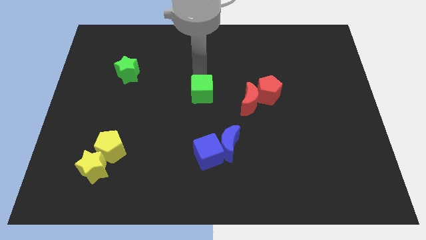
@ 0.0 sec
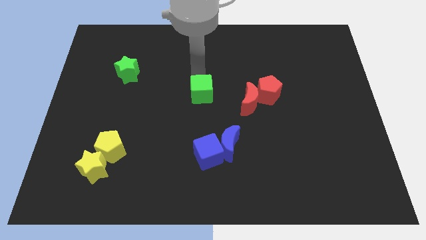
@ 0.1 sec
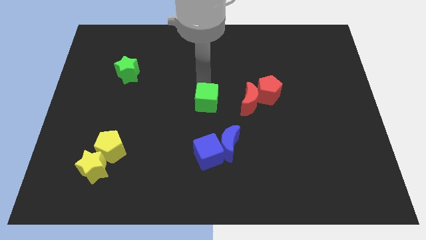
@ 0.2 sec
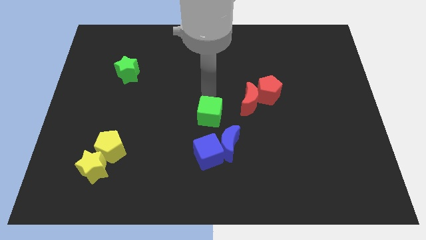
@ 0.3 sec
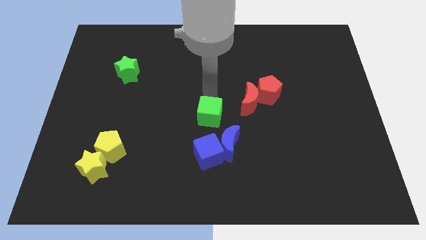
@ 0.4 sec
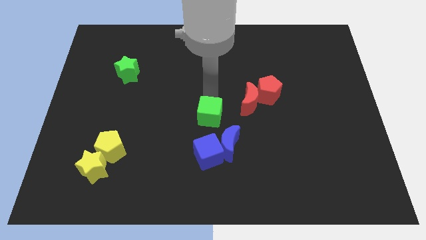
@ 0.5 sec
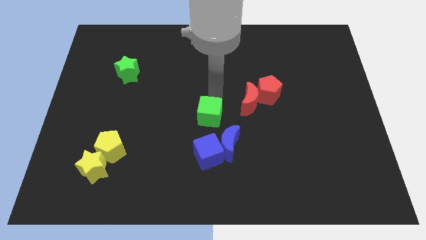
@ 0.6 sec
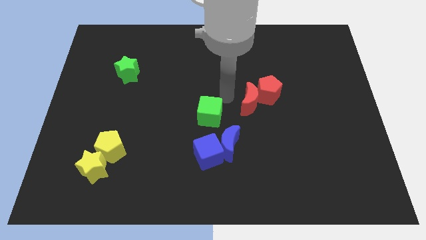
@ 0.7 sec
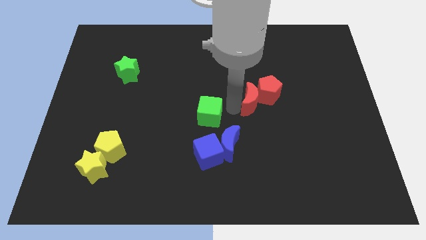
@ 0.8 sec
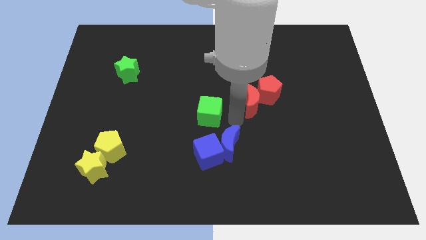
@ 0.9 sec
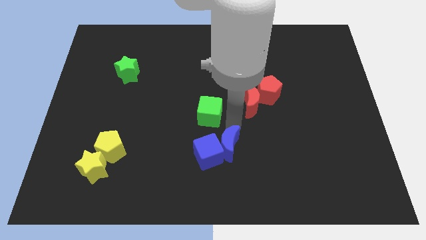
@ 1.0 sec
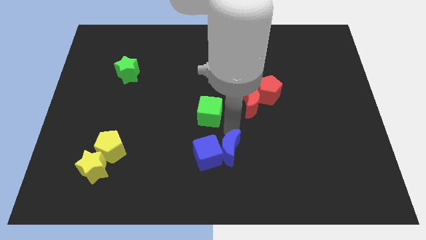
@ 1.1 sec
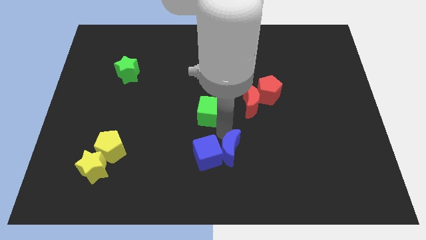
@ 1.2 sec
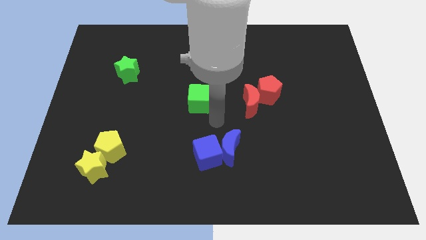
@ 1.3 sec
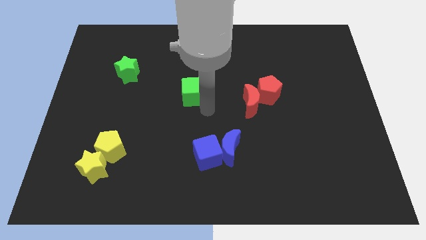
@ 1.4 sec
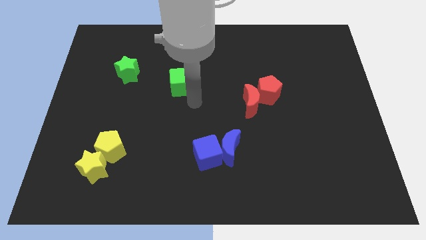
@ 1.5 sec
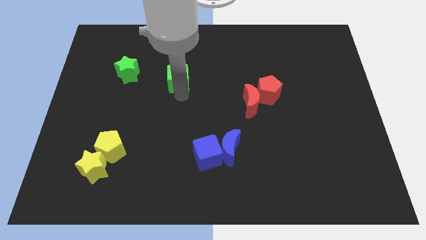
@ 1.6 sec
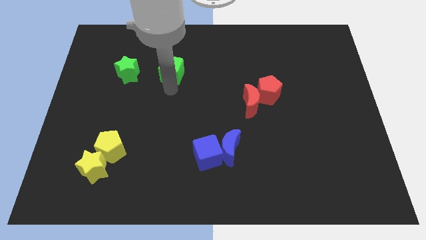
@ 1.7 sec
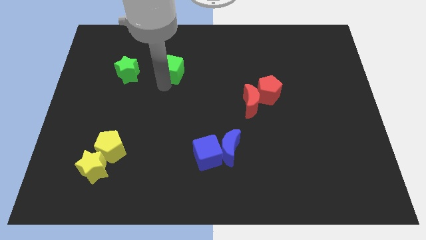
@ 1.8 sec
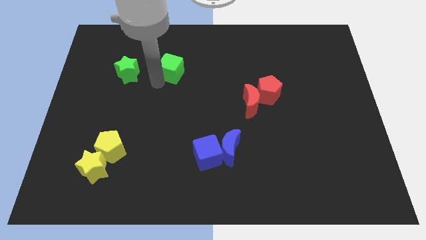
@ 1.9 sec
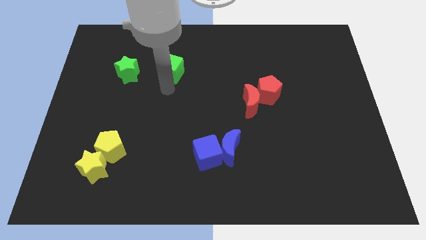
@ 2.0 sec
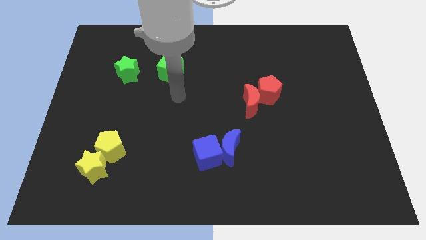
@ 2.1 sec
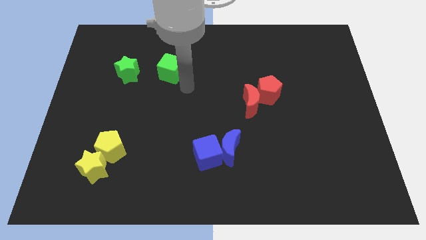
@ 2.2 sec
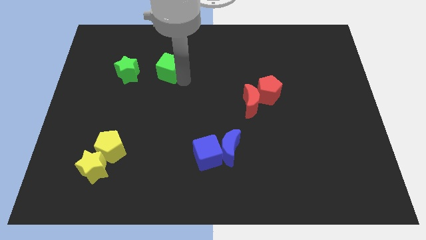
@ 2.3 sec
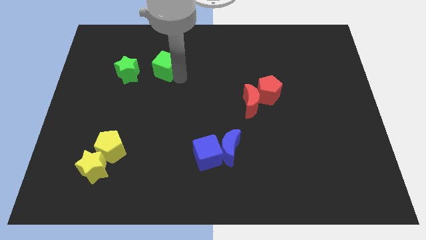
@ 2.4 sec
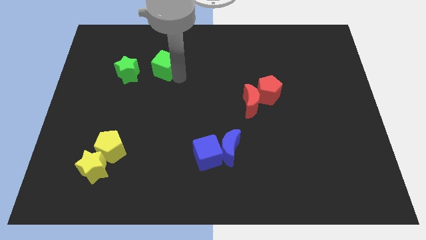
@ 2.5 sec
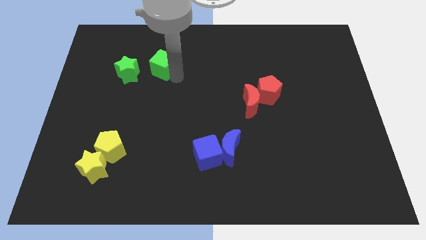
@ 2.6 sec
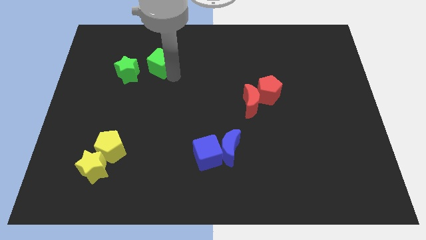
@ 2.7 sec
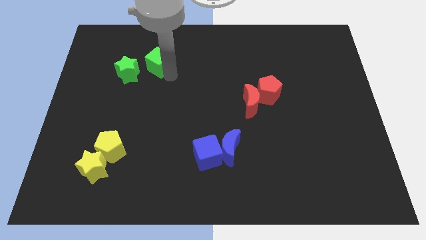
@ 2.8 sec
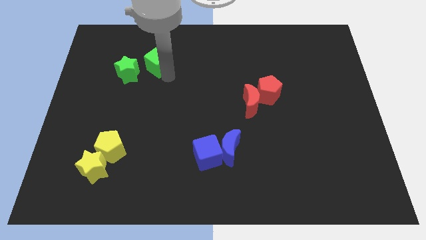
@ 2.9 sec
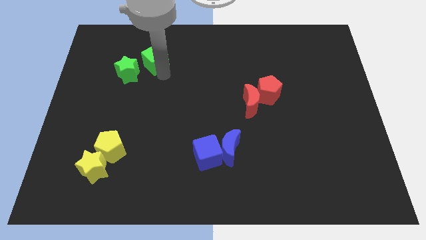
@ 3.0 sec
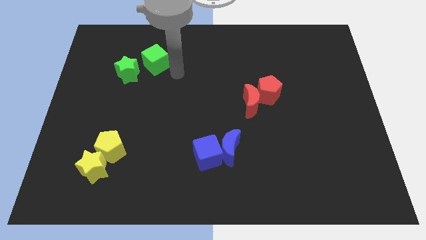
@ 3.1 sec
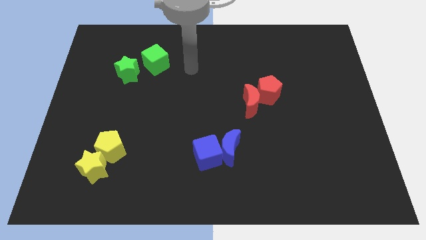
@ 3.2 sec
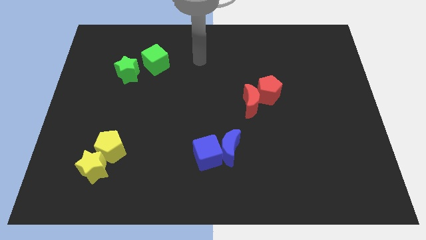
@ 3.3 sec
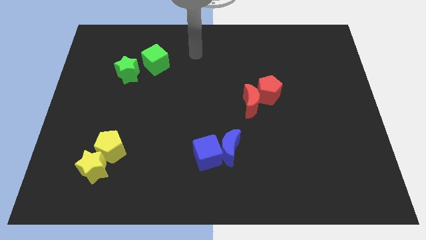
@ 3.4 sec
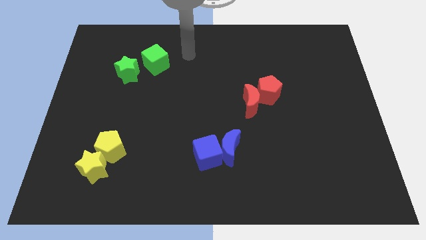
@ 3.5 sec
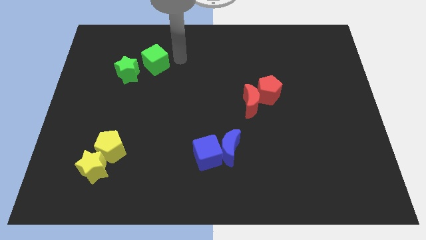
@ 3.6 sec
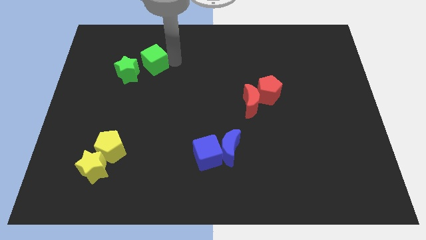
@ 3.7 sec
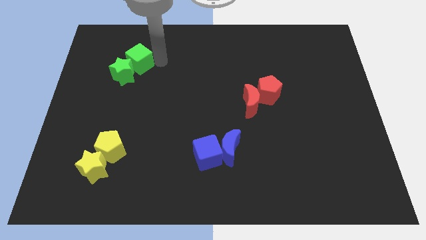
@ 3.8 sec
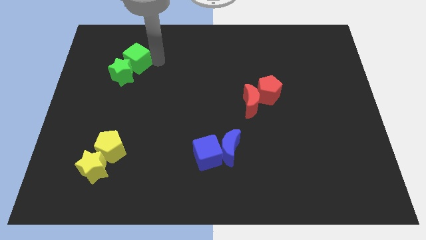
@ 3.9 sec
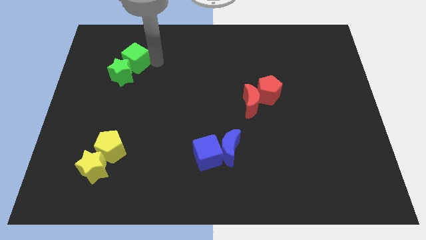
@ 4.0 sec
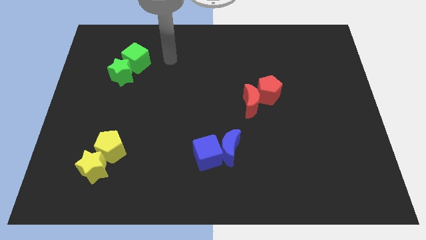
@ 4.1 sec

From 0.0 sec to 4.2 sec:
slide the green cube into the green star

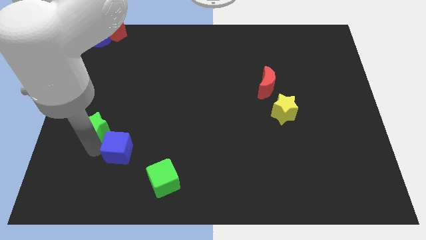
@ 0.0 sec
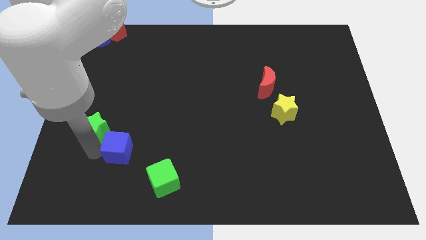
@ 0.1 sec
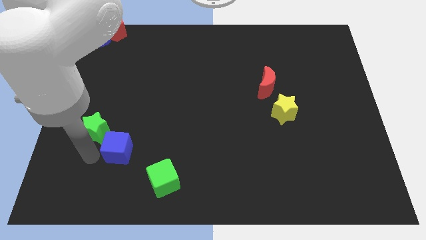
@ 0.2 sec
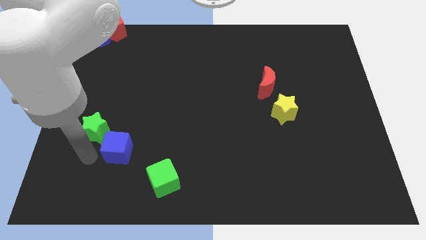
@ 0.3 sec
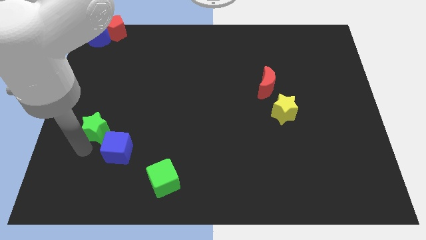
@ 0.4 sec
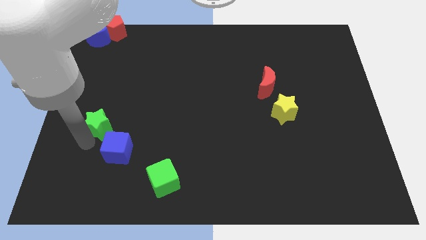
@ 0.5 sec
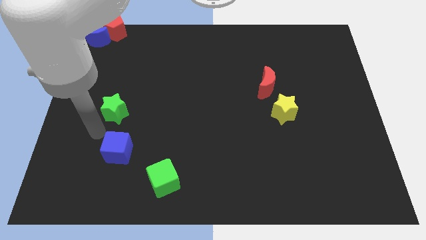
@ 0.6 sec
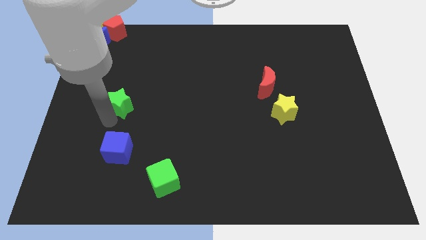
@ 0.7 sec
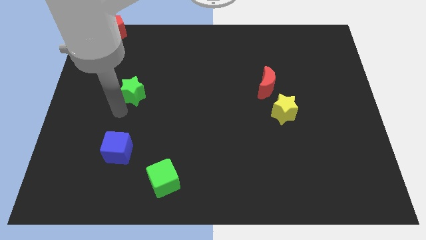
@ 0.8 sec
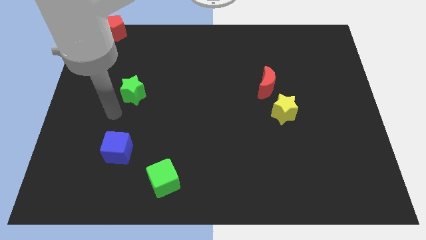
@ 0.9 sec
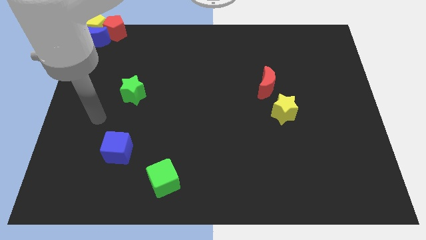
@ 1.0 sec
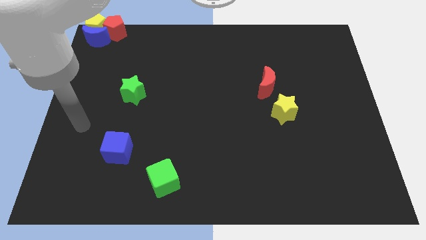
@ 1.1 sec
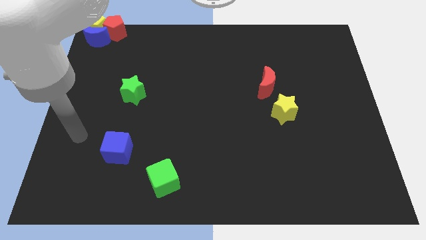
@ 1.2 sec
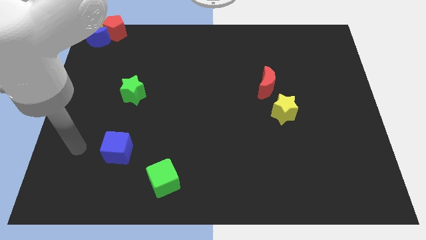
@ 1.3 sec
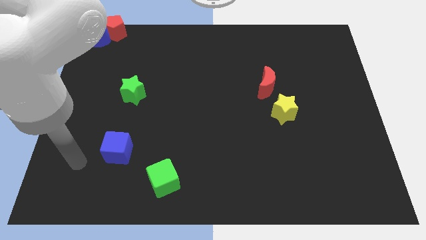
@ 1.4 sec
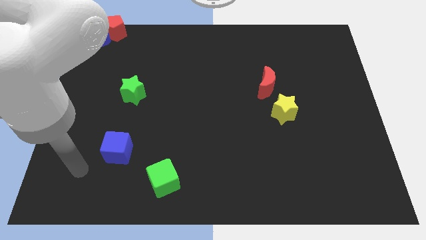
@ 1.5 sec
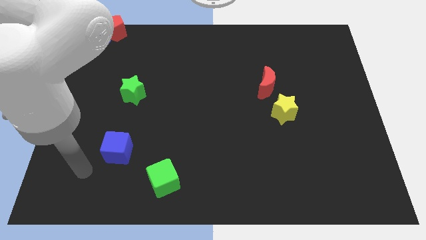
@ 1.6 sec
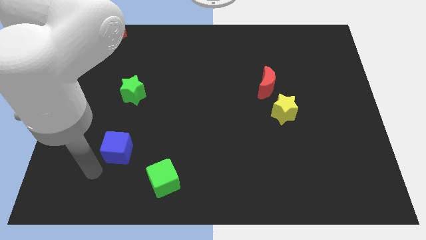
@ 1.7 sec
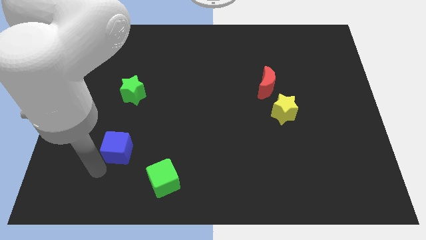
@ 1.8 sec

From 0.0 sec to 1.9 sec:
push the green star parallel to the red crescent

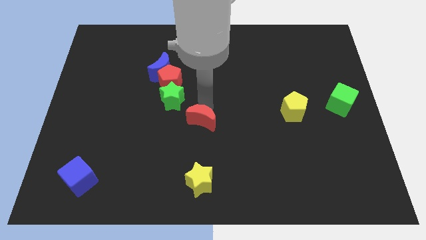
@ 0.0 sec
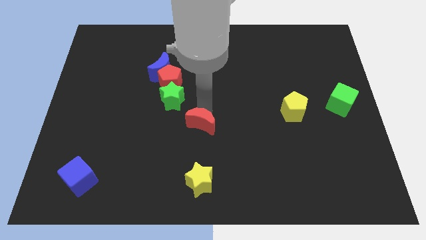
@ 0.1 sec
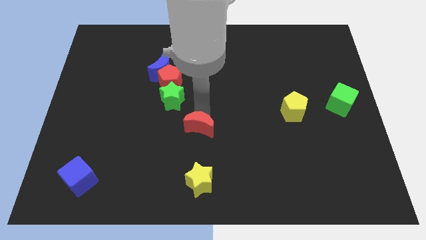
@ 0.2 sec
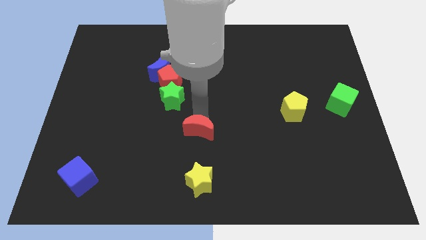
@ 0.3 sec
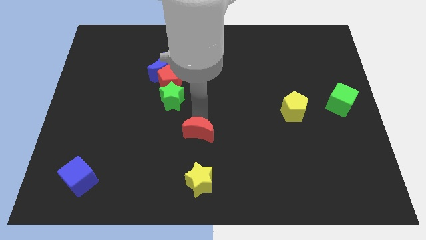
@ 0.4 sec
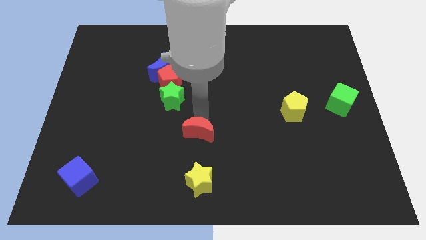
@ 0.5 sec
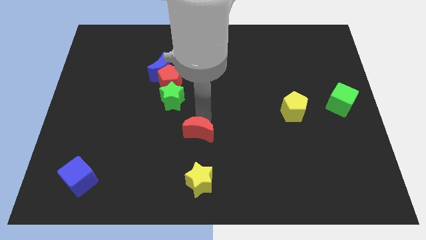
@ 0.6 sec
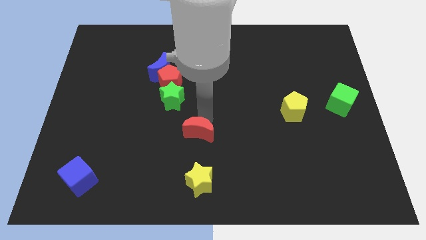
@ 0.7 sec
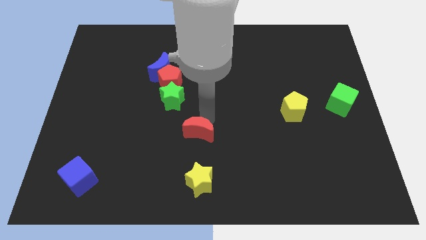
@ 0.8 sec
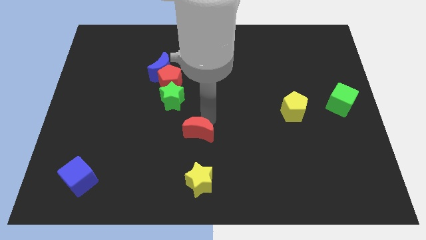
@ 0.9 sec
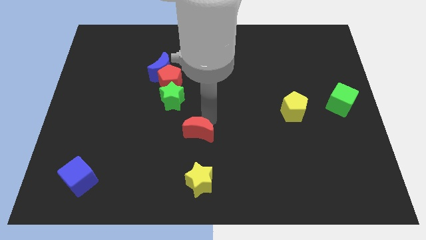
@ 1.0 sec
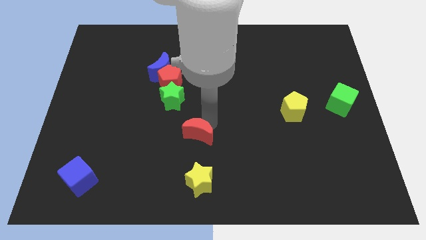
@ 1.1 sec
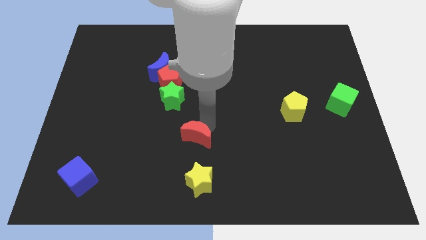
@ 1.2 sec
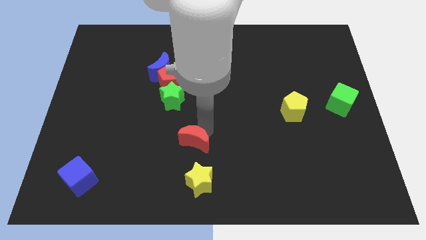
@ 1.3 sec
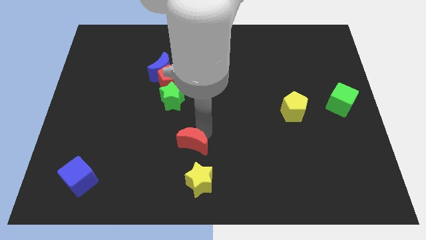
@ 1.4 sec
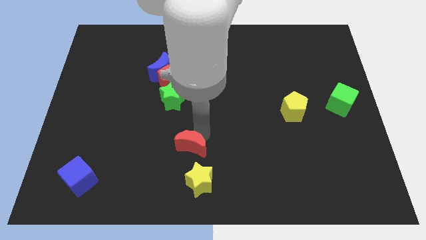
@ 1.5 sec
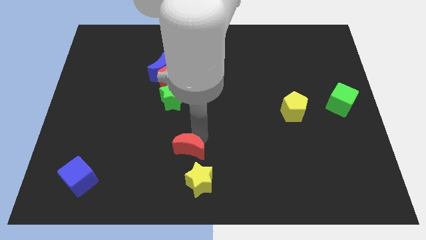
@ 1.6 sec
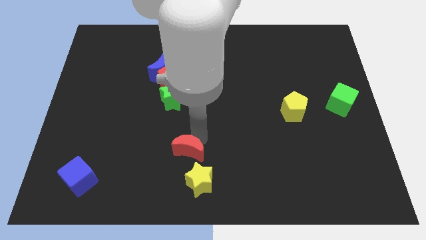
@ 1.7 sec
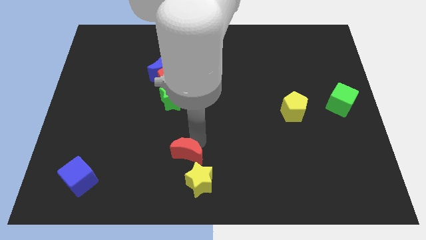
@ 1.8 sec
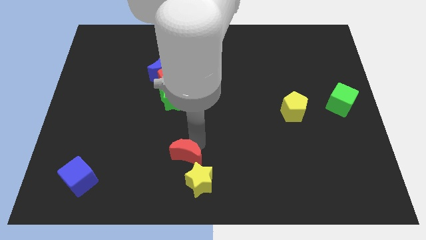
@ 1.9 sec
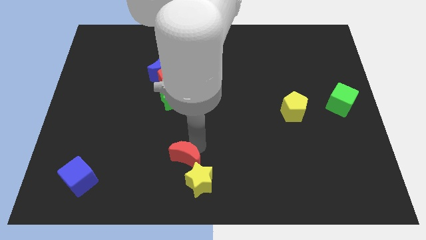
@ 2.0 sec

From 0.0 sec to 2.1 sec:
move red moon close to yellow star

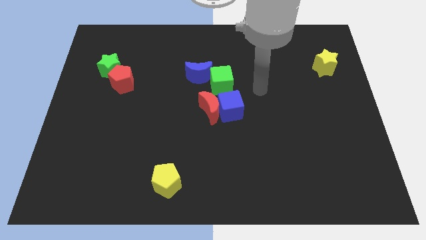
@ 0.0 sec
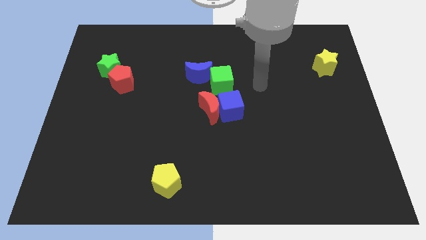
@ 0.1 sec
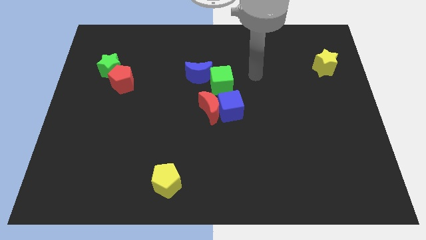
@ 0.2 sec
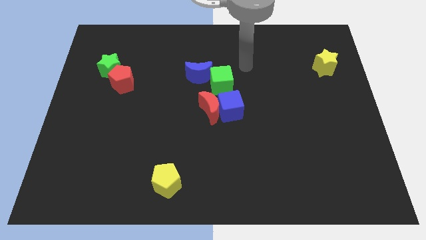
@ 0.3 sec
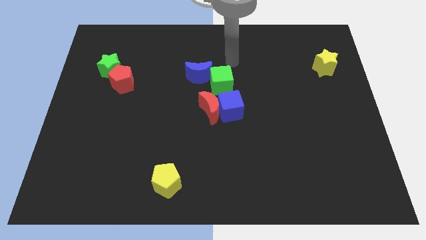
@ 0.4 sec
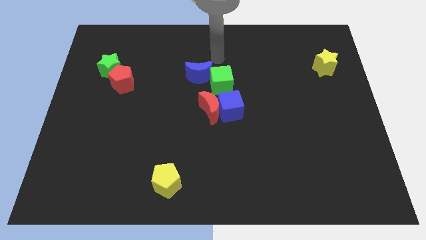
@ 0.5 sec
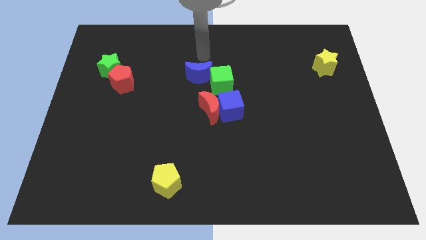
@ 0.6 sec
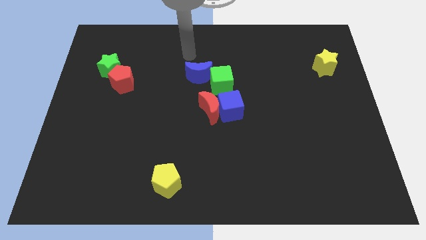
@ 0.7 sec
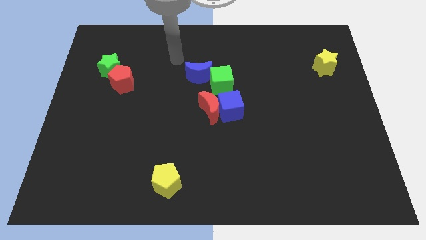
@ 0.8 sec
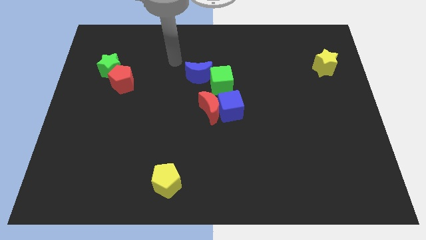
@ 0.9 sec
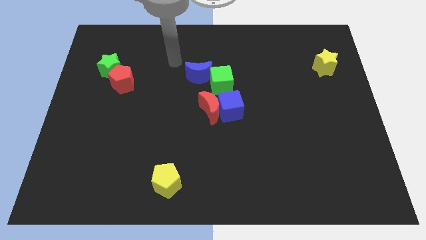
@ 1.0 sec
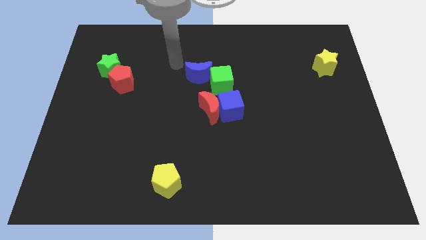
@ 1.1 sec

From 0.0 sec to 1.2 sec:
move your arm towards top of the board
